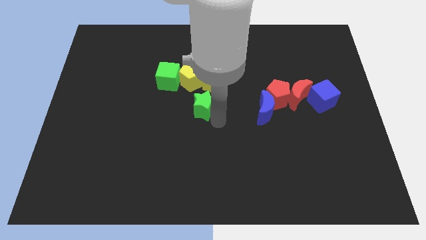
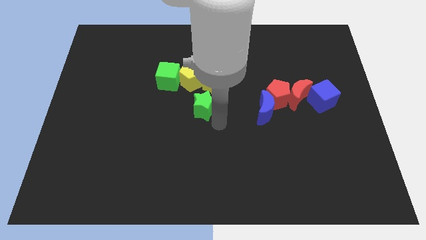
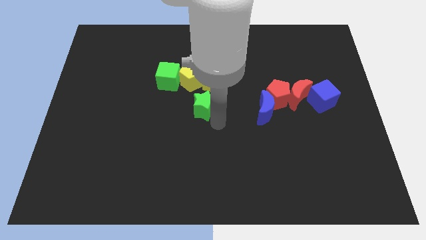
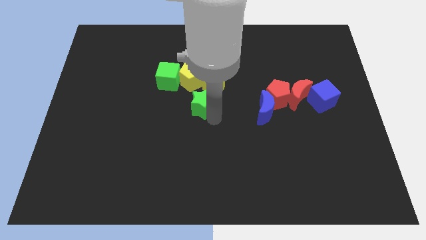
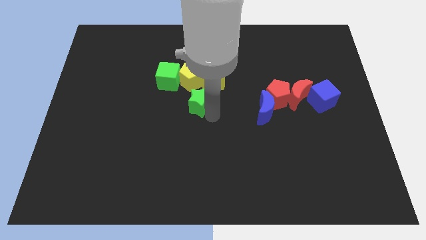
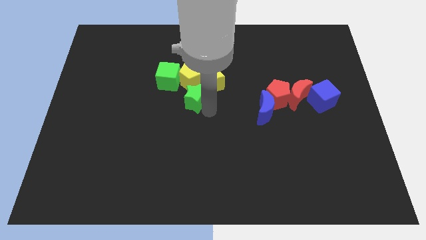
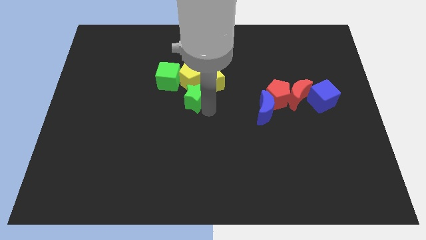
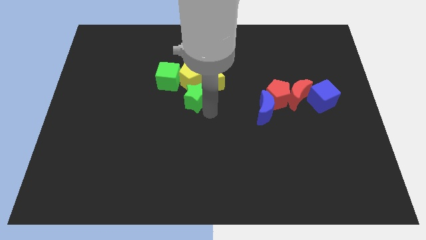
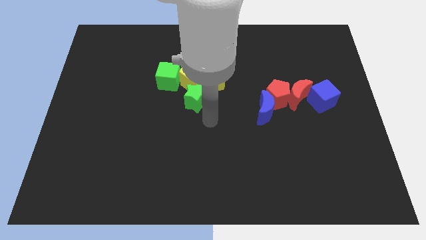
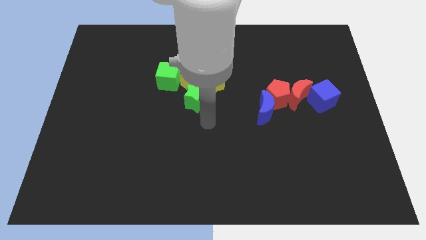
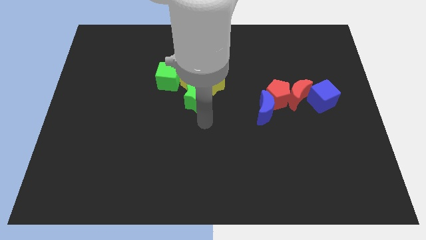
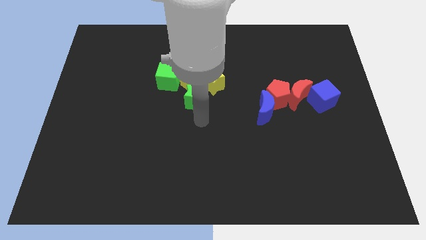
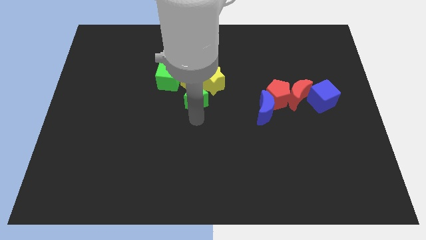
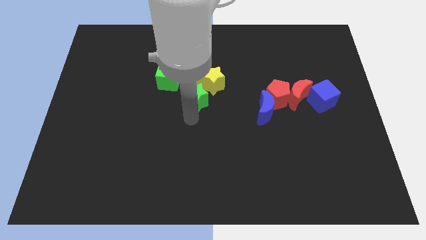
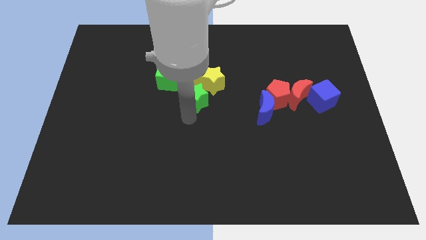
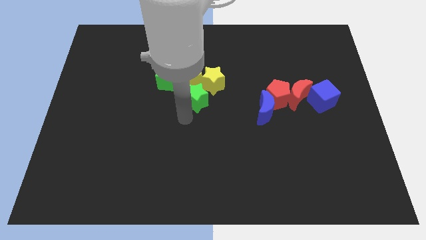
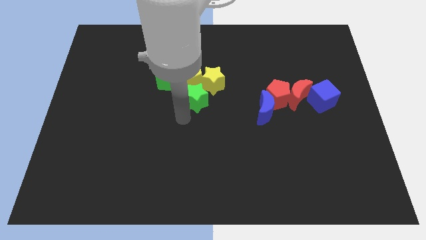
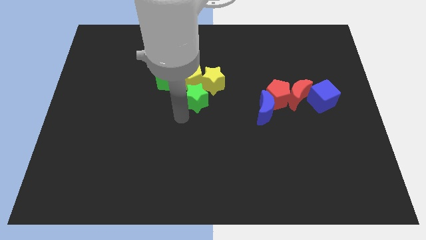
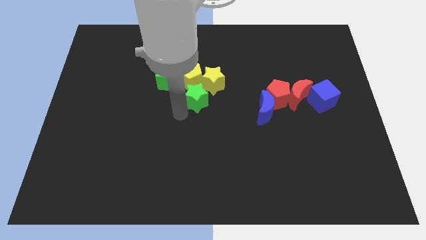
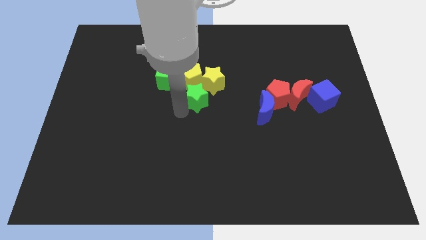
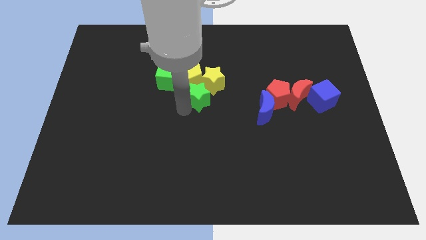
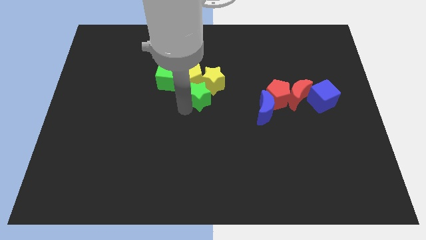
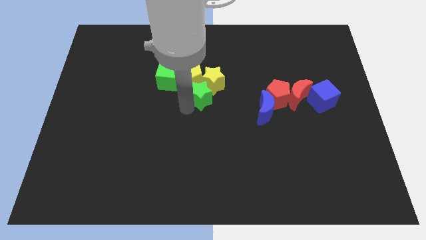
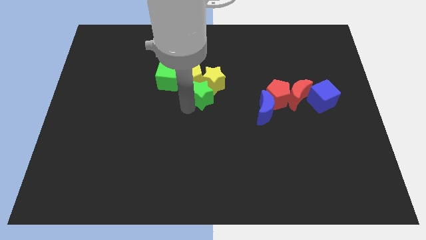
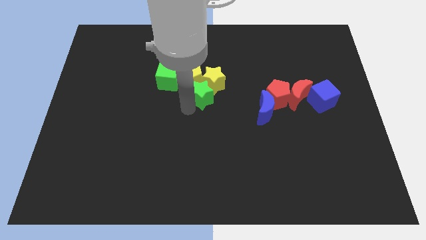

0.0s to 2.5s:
move the green star into the group of yellow blocks

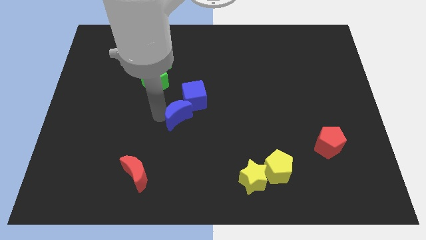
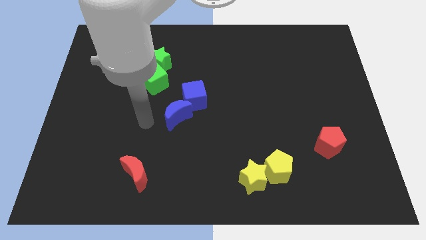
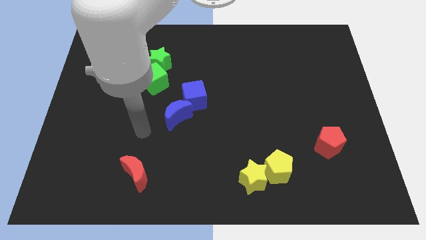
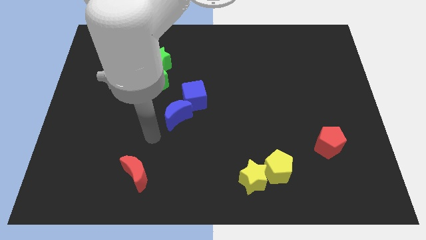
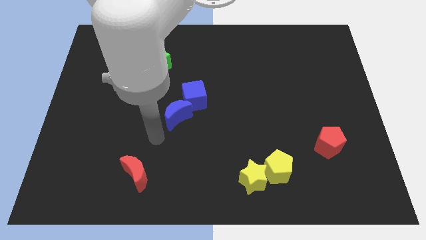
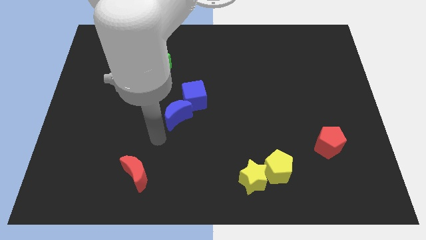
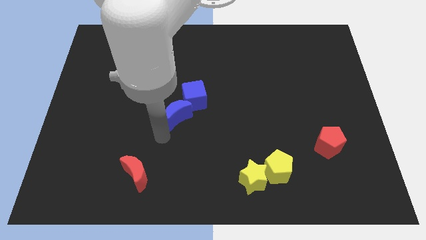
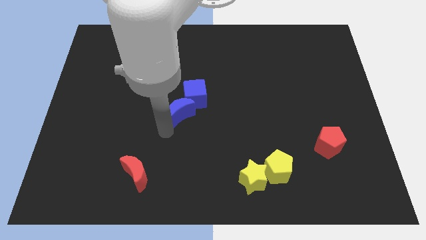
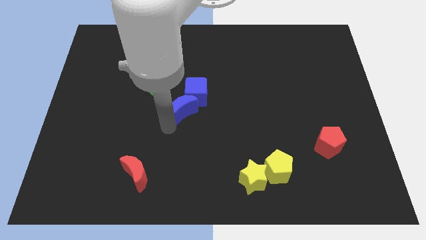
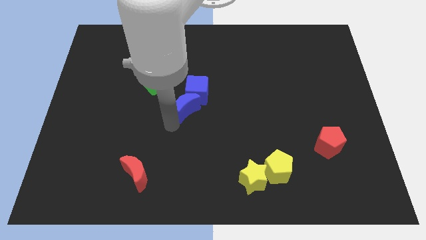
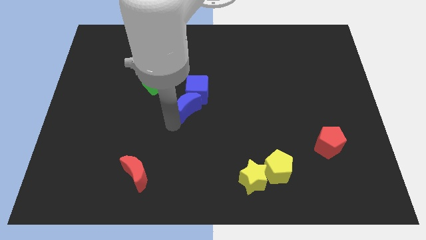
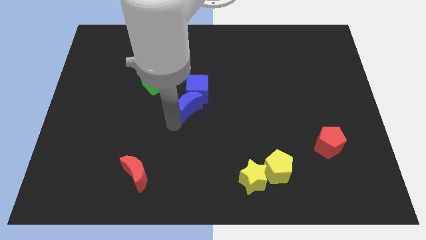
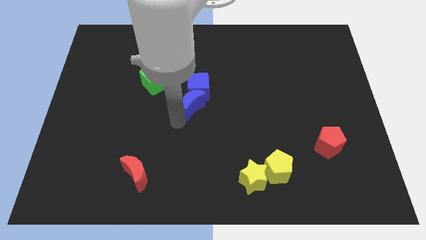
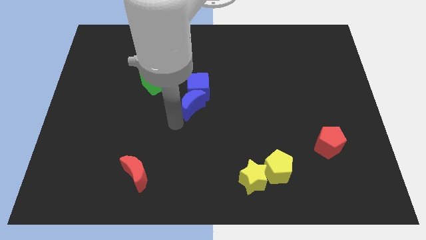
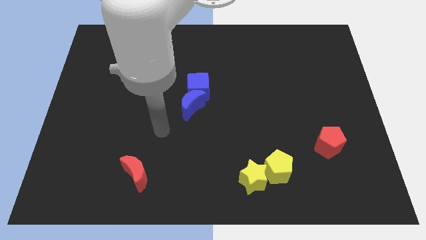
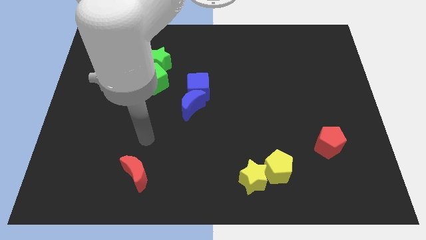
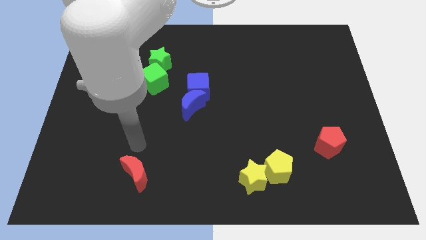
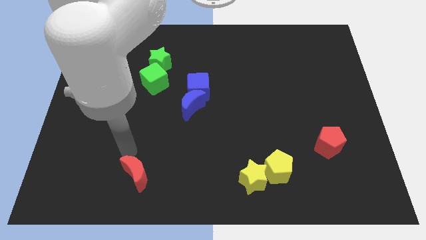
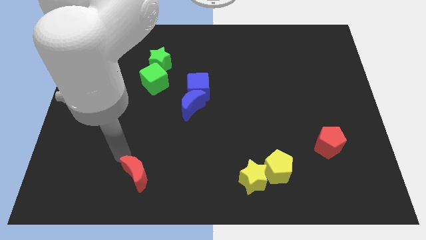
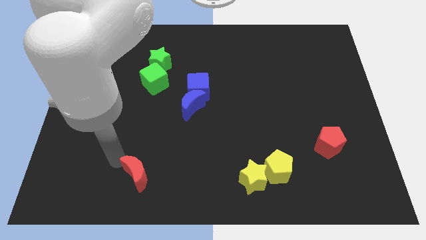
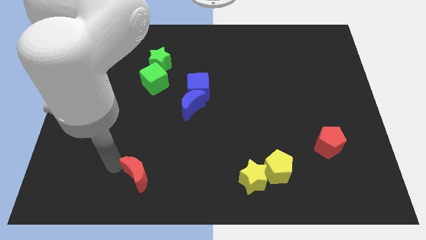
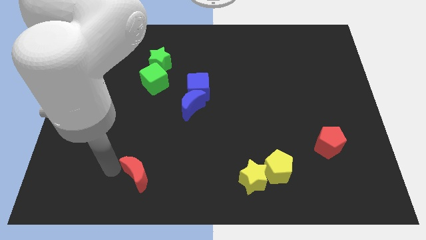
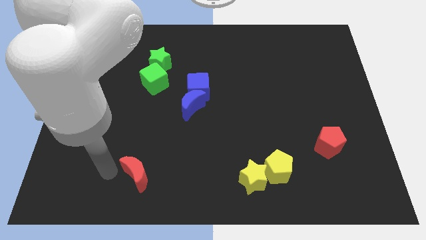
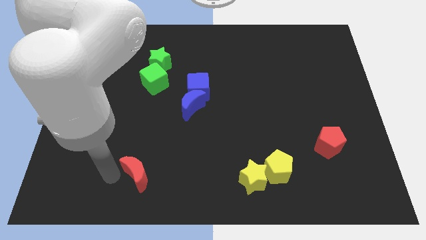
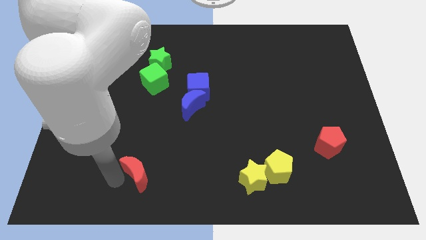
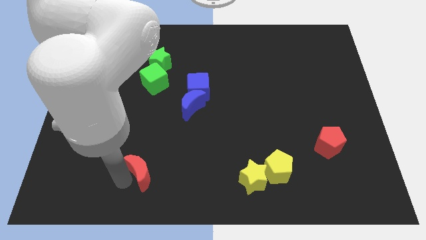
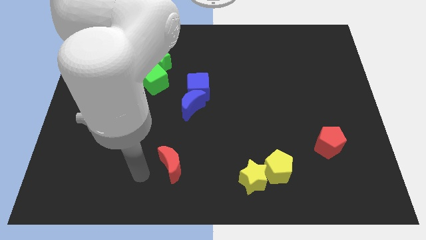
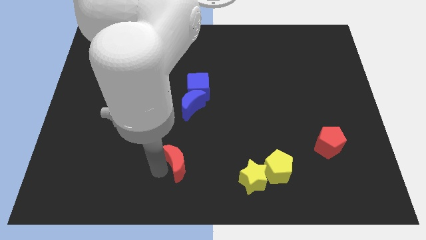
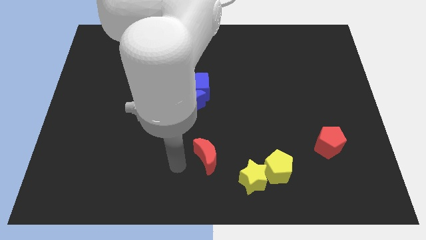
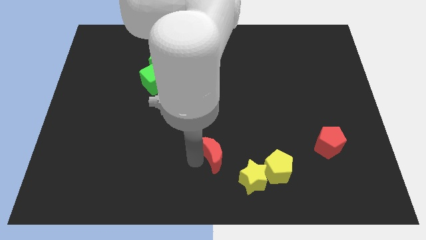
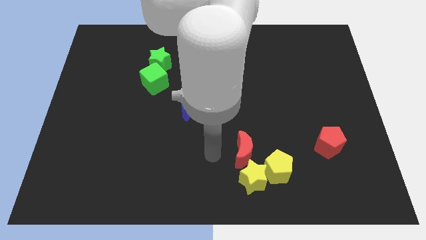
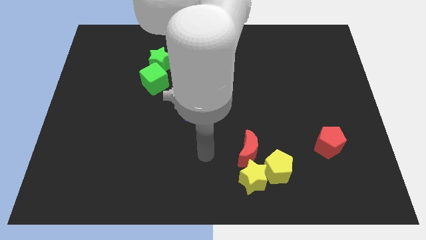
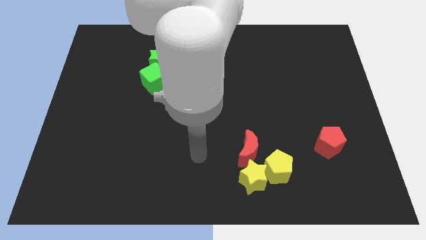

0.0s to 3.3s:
place red crescent above yellow star

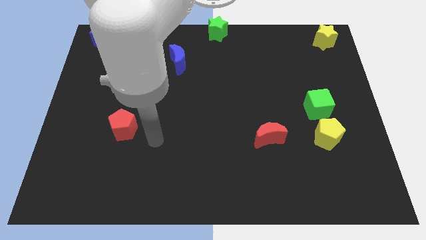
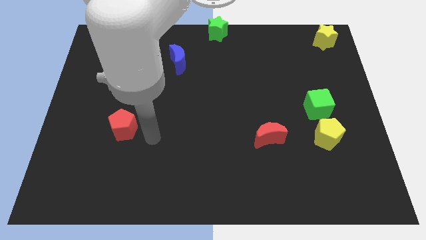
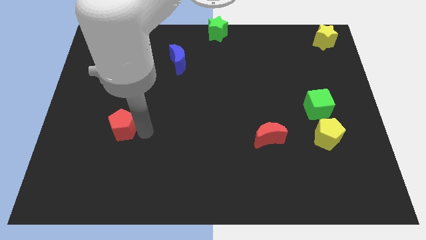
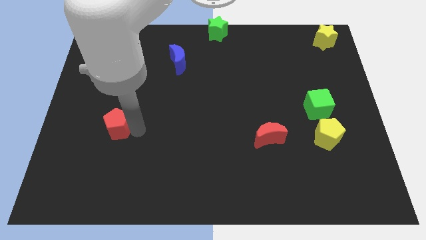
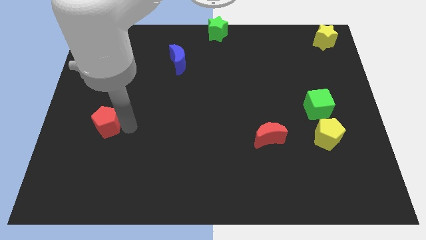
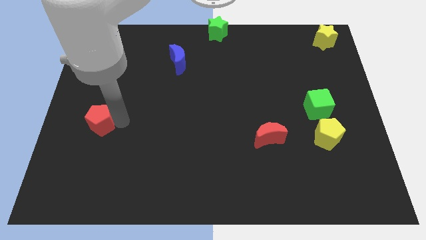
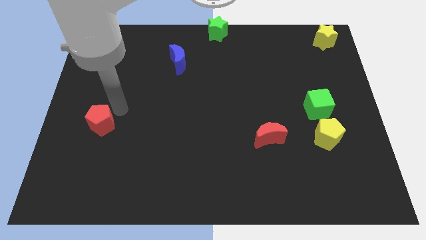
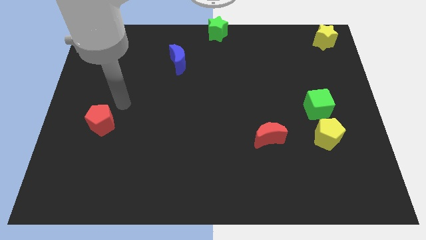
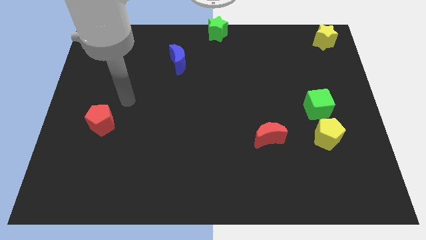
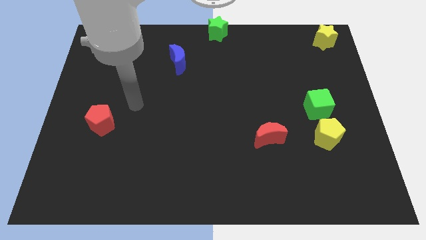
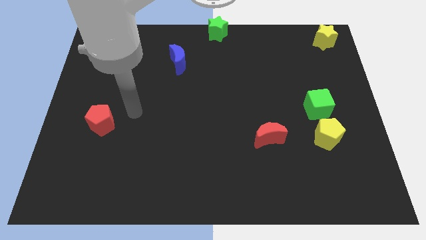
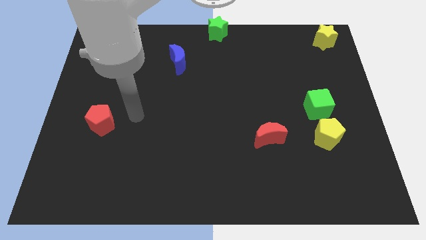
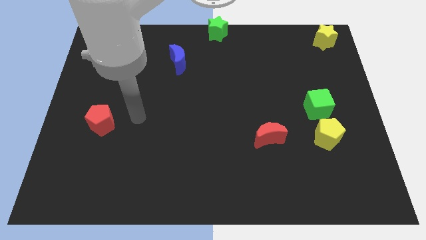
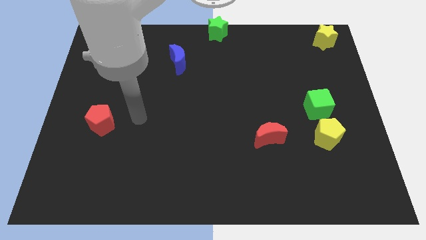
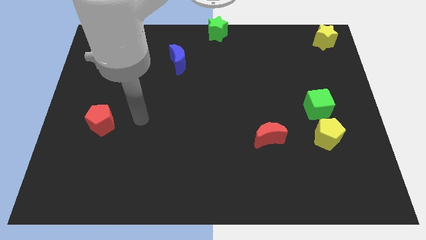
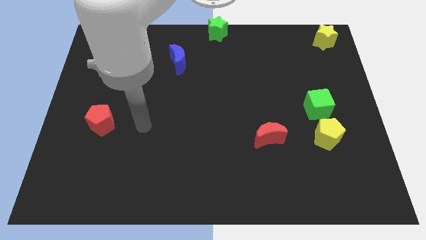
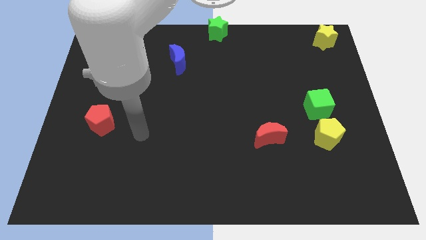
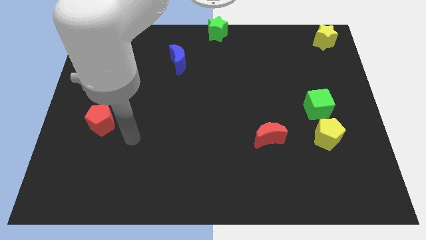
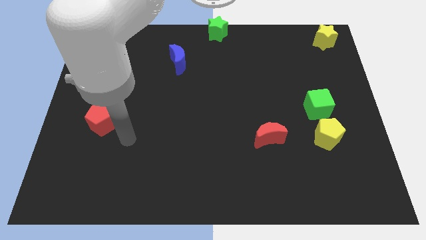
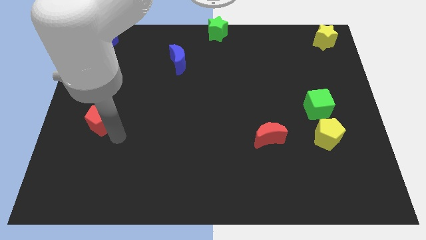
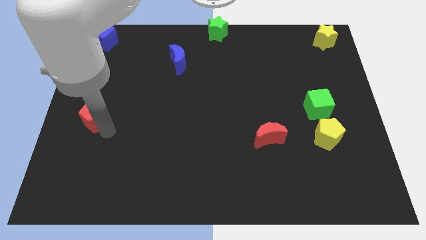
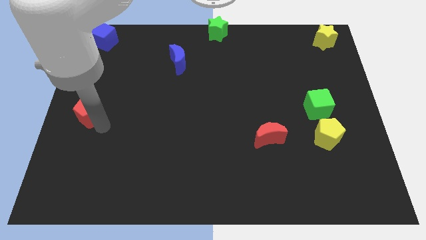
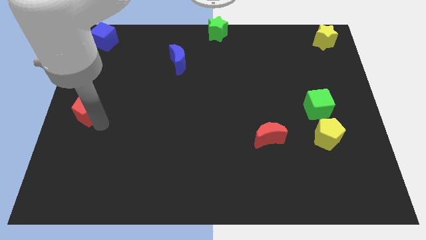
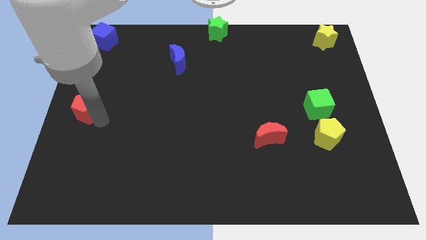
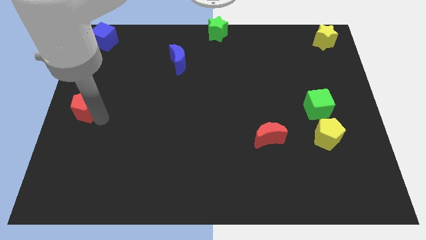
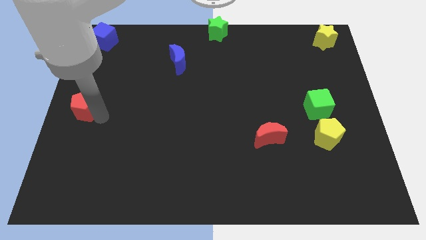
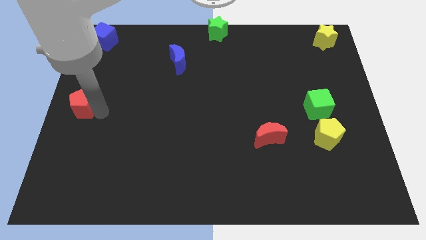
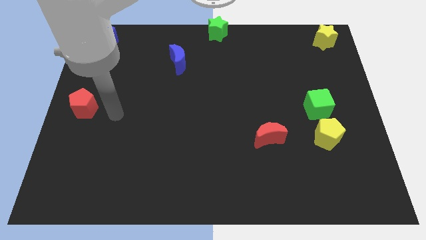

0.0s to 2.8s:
place red pentagon below blue cube

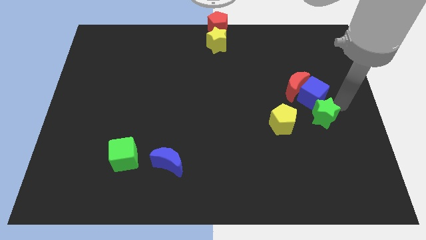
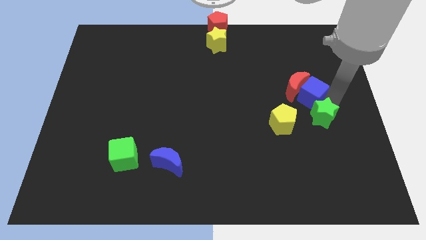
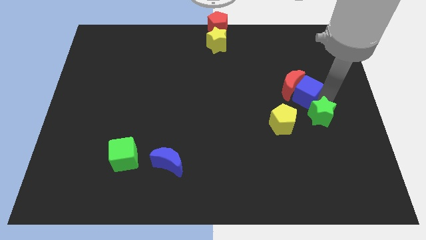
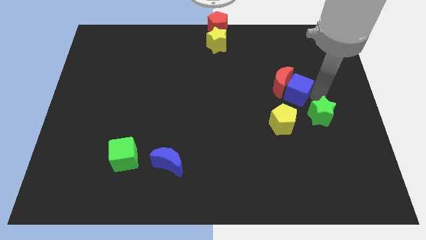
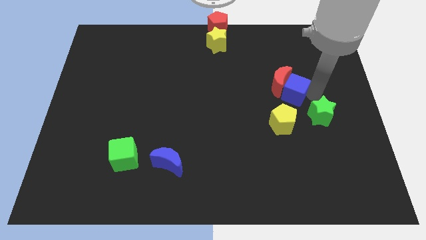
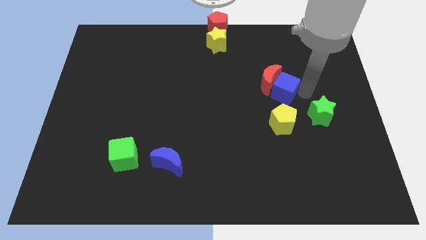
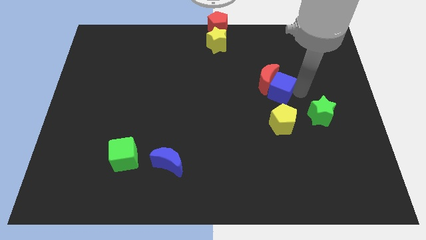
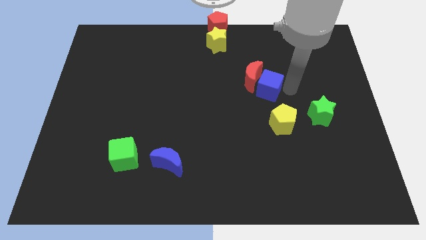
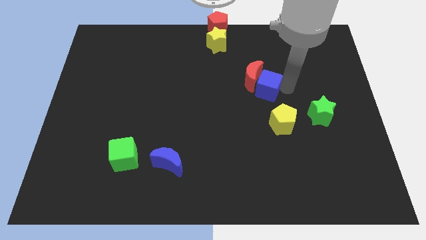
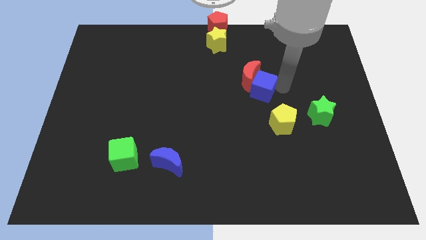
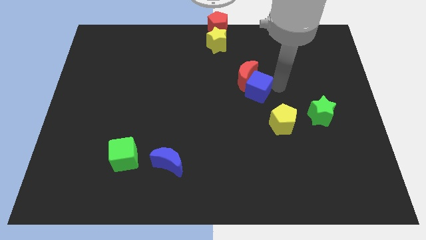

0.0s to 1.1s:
push blue cube in to red moon
